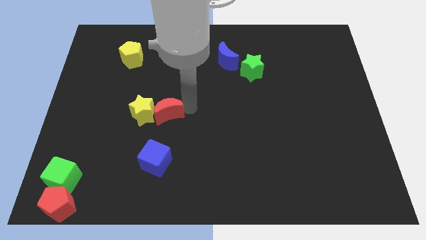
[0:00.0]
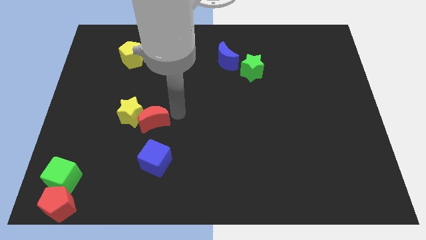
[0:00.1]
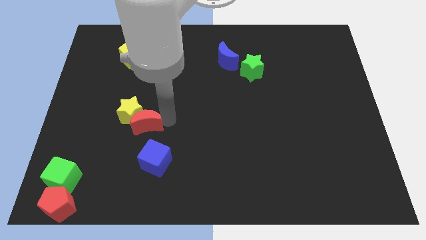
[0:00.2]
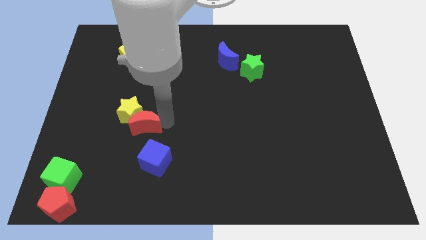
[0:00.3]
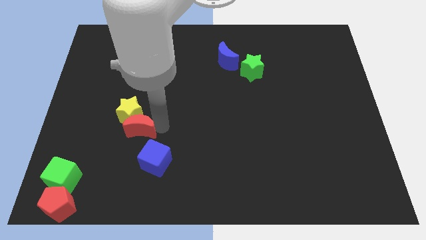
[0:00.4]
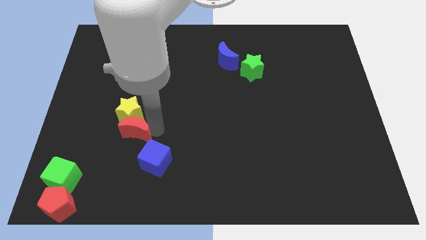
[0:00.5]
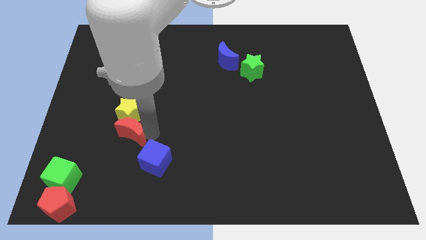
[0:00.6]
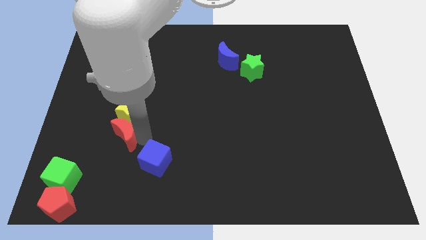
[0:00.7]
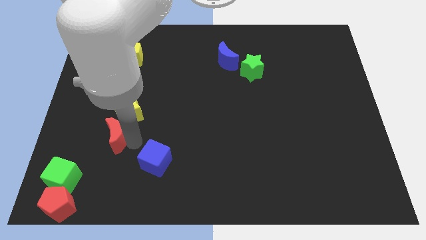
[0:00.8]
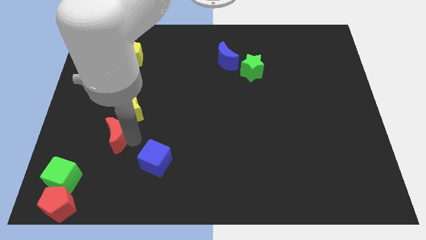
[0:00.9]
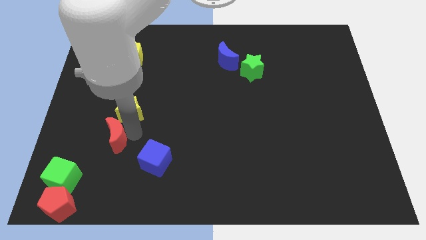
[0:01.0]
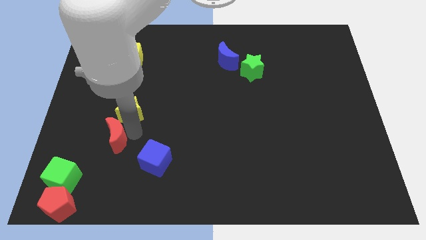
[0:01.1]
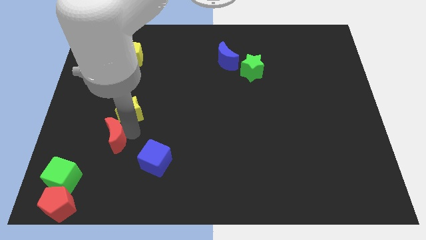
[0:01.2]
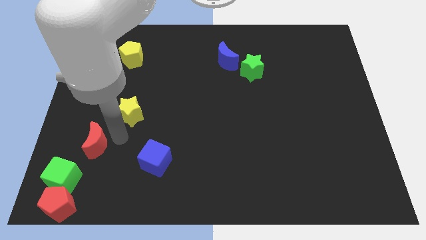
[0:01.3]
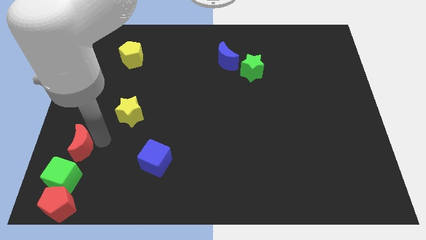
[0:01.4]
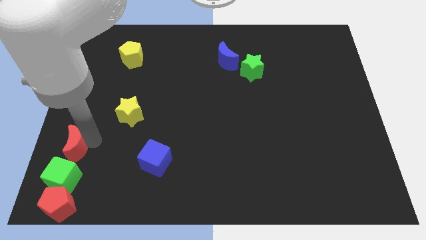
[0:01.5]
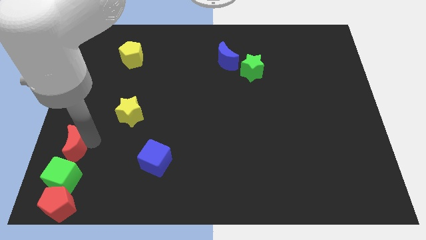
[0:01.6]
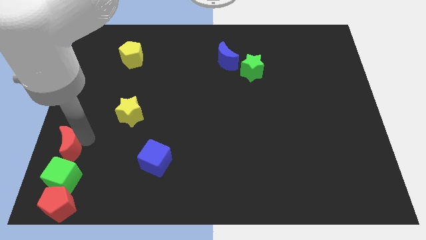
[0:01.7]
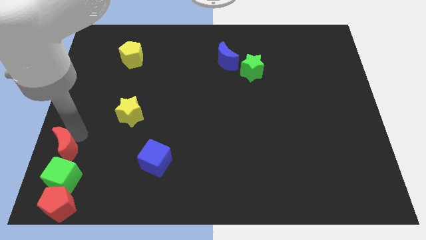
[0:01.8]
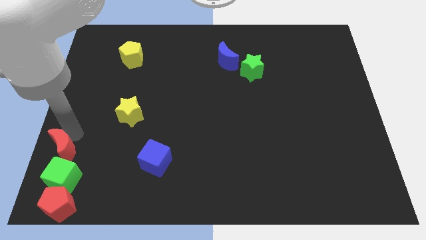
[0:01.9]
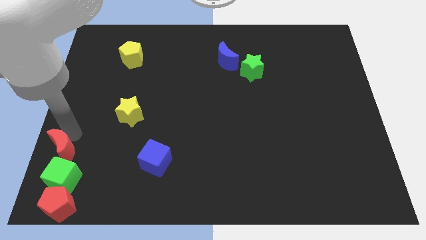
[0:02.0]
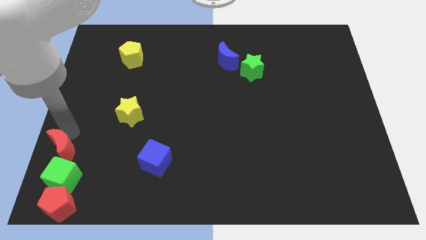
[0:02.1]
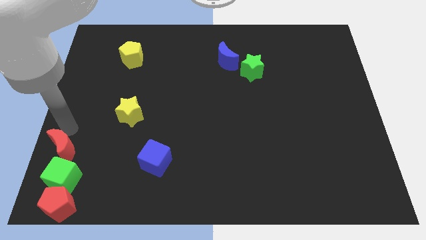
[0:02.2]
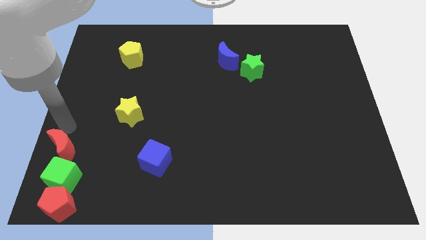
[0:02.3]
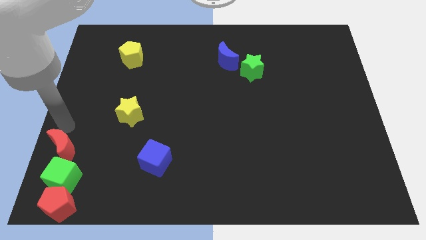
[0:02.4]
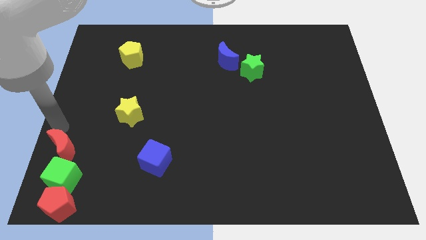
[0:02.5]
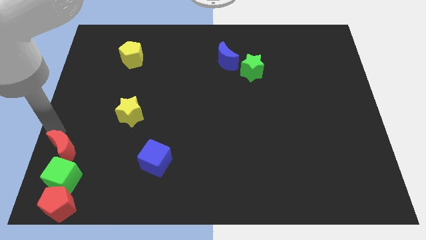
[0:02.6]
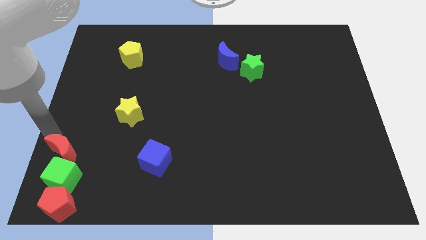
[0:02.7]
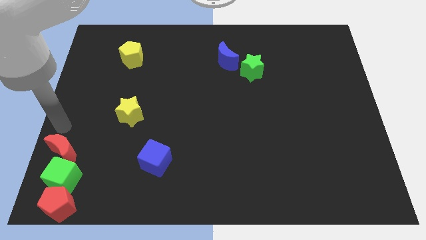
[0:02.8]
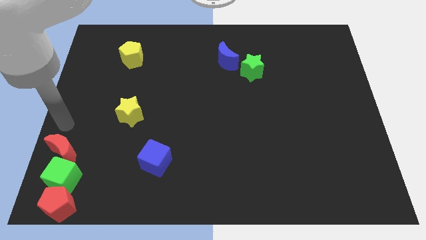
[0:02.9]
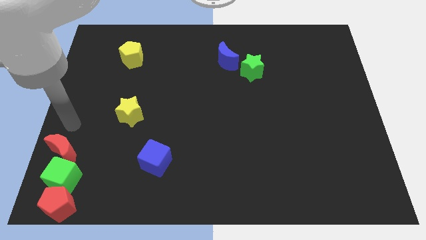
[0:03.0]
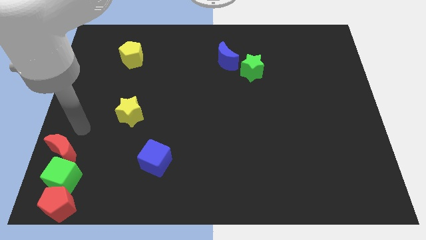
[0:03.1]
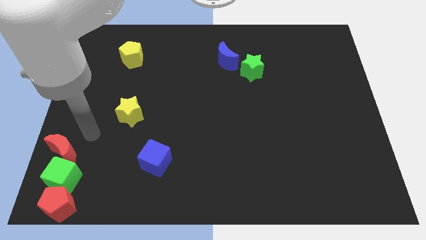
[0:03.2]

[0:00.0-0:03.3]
move red moon to the top left side of the green cube

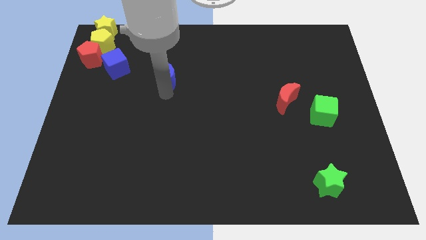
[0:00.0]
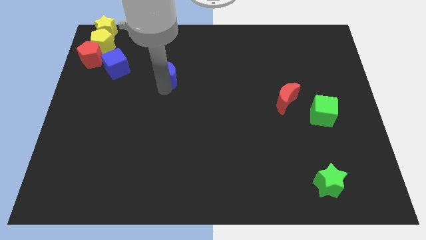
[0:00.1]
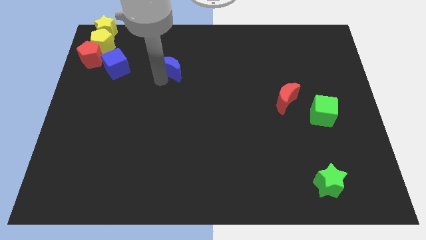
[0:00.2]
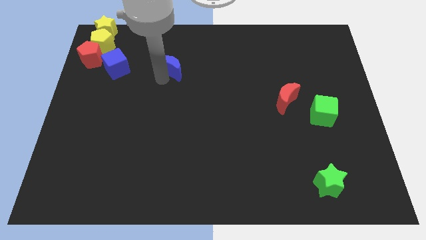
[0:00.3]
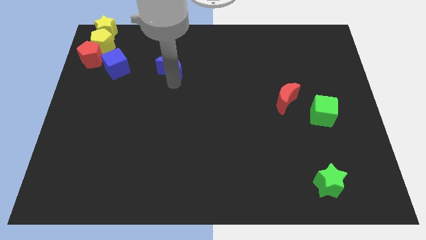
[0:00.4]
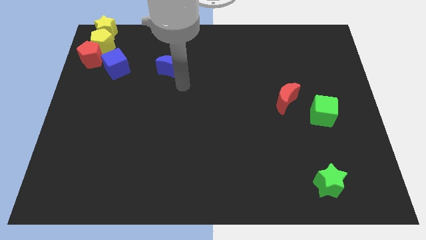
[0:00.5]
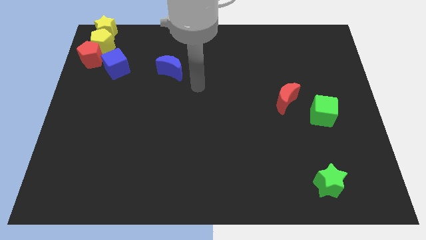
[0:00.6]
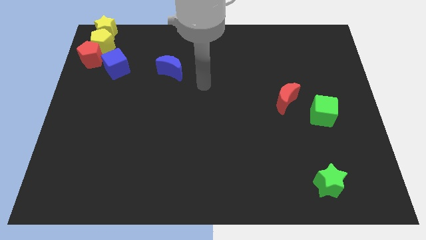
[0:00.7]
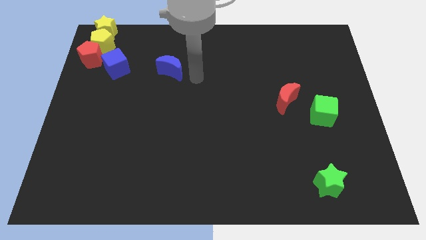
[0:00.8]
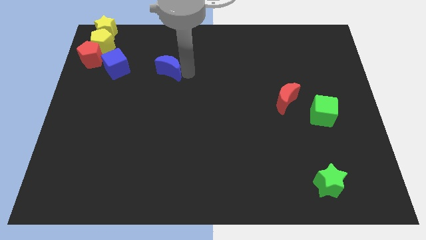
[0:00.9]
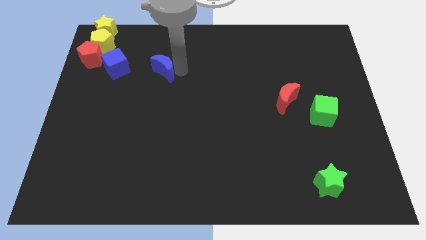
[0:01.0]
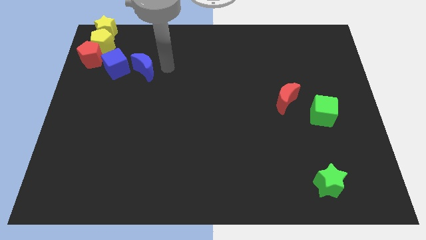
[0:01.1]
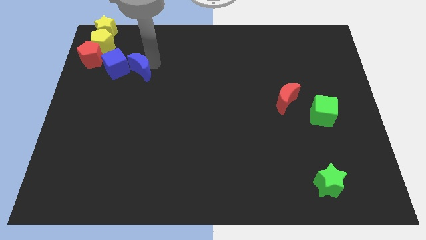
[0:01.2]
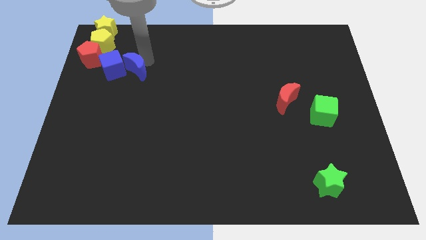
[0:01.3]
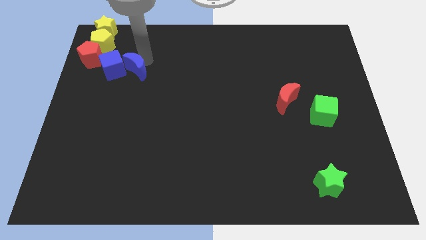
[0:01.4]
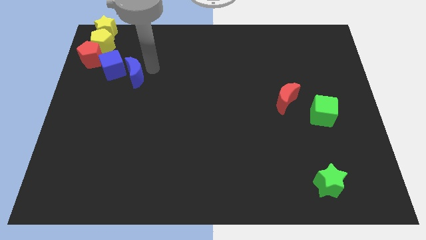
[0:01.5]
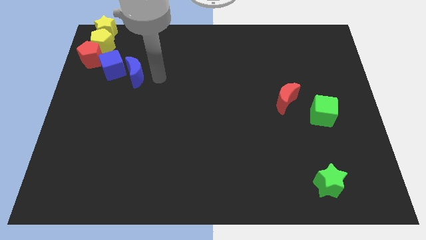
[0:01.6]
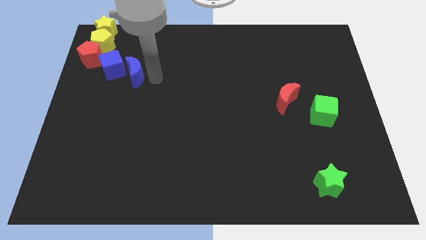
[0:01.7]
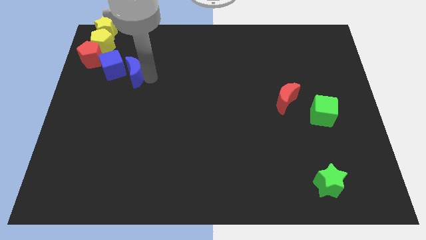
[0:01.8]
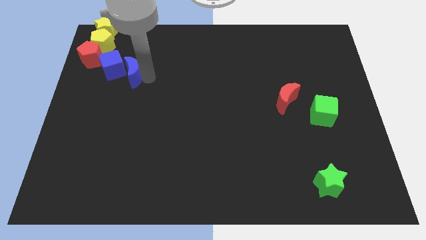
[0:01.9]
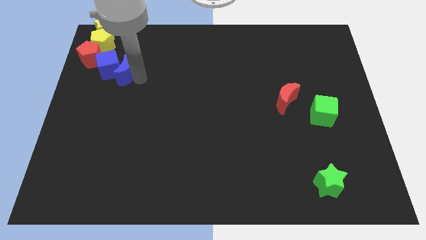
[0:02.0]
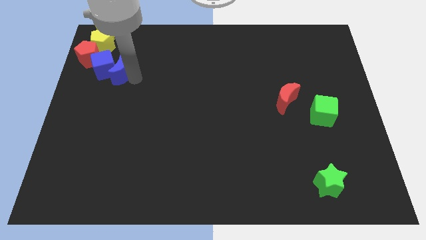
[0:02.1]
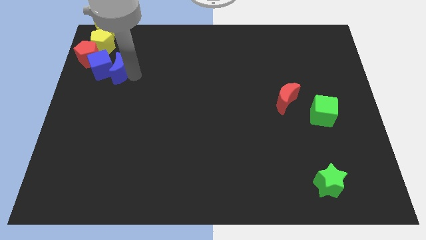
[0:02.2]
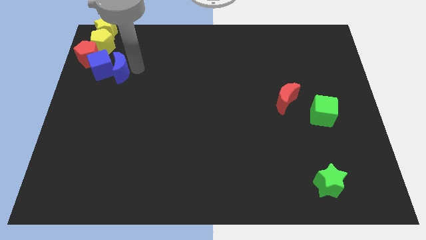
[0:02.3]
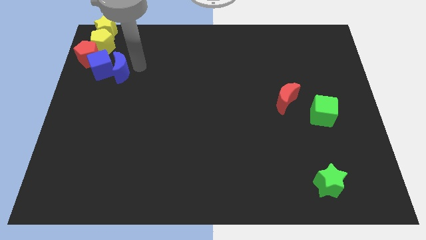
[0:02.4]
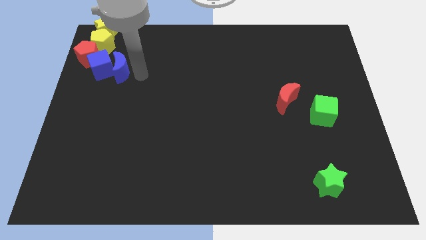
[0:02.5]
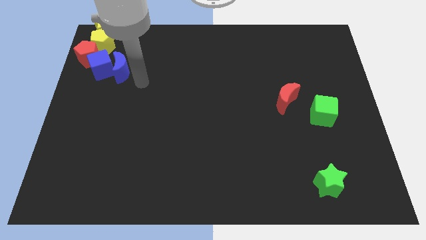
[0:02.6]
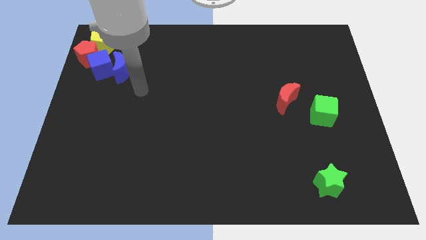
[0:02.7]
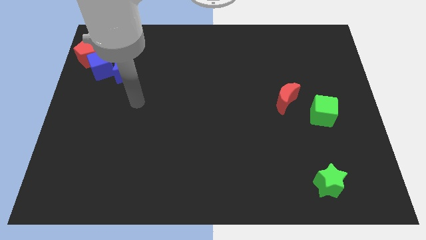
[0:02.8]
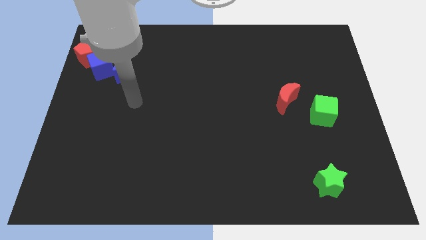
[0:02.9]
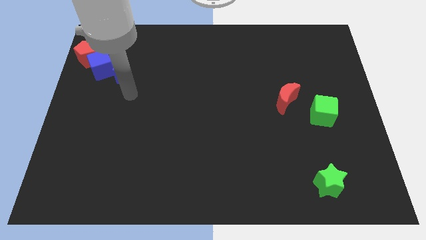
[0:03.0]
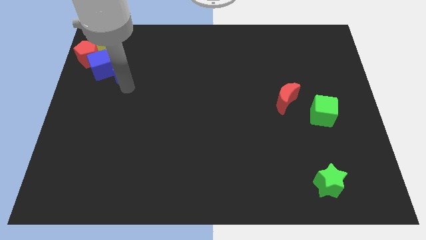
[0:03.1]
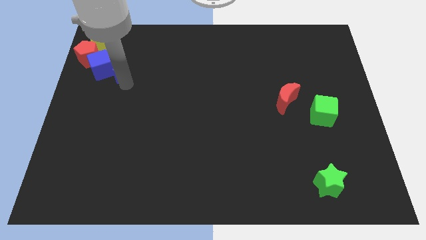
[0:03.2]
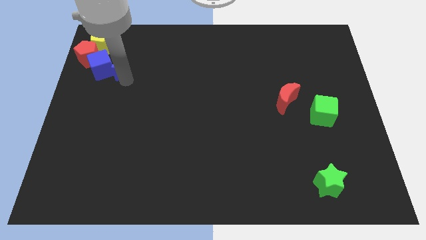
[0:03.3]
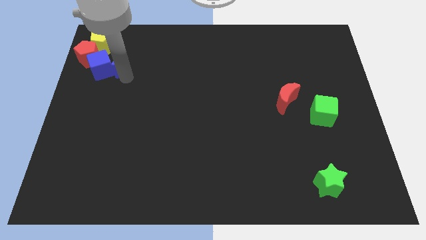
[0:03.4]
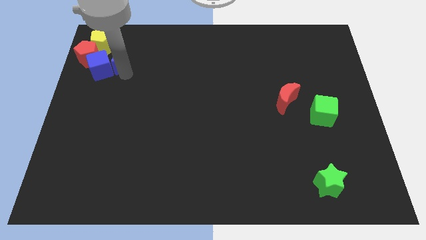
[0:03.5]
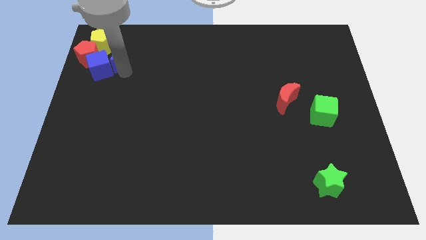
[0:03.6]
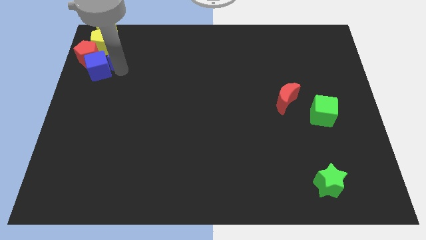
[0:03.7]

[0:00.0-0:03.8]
push the blue crescent to the right of the blue cube

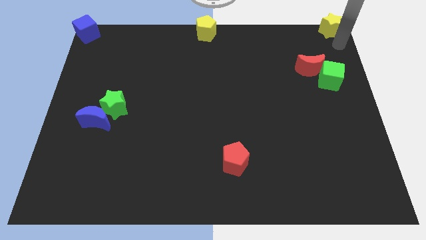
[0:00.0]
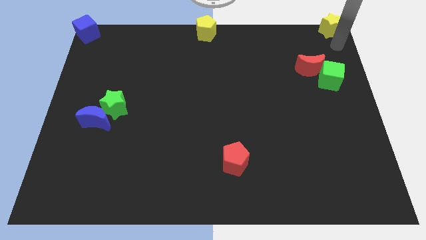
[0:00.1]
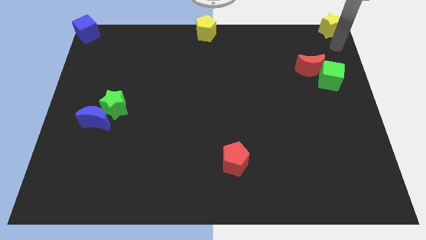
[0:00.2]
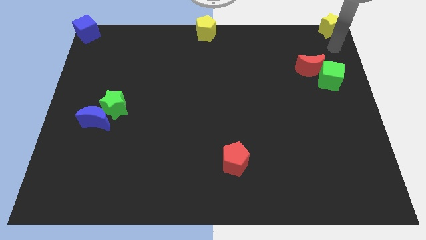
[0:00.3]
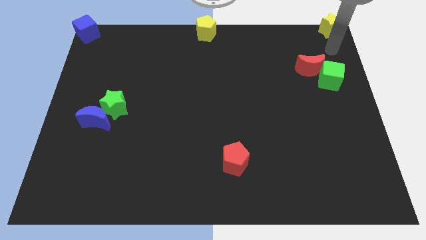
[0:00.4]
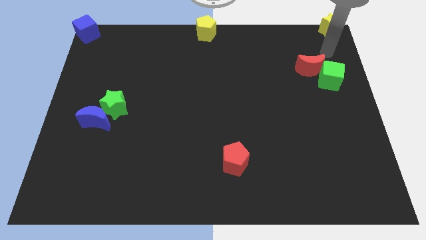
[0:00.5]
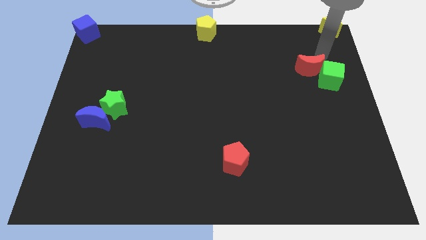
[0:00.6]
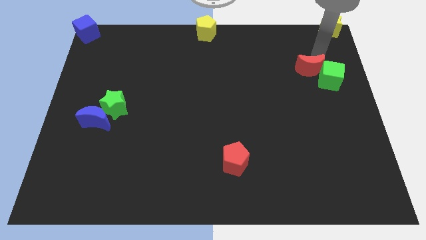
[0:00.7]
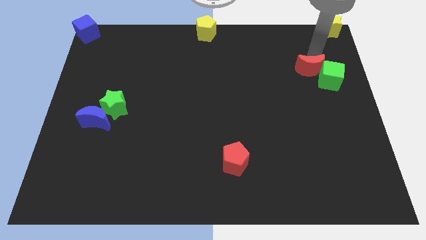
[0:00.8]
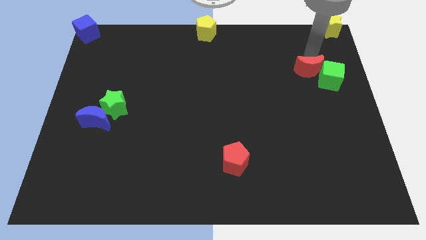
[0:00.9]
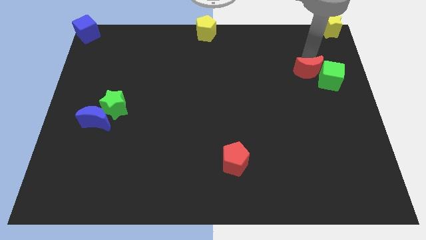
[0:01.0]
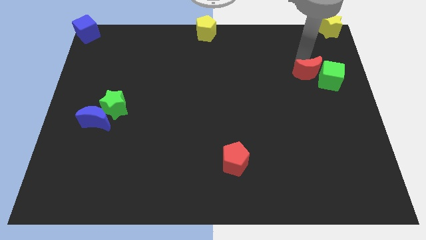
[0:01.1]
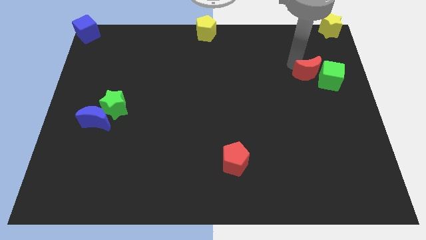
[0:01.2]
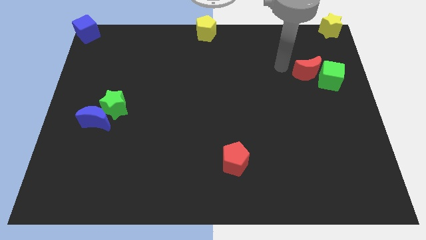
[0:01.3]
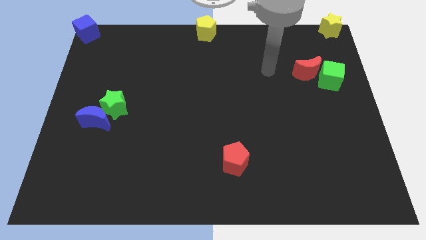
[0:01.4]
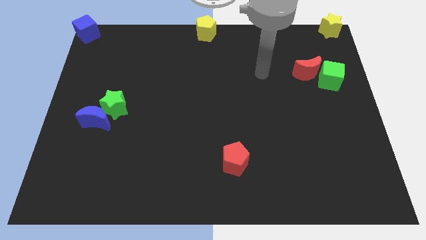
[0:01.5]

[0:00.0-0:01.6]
touch the red crescent

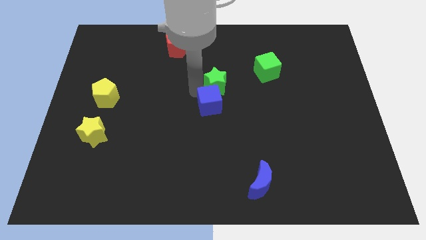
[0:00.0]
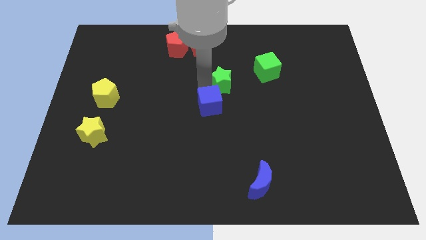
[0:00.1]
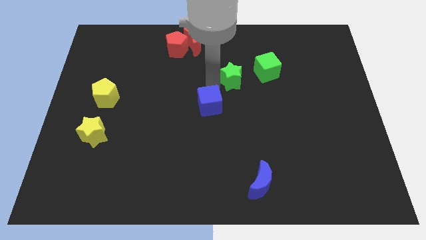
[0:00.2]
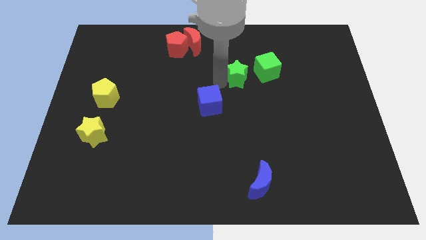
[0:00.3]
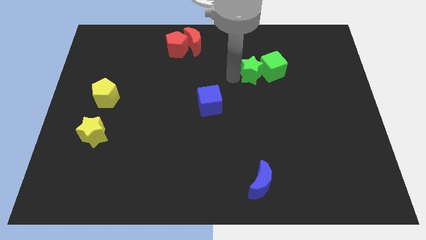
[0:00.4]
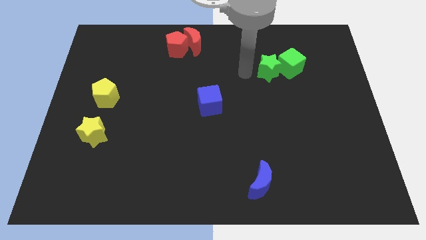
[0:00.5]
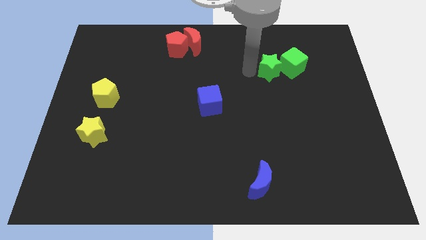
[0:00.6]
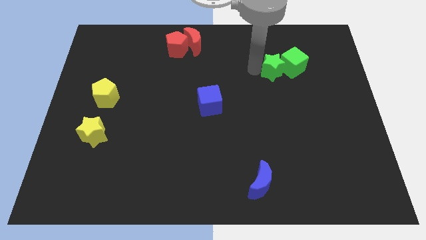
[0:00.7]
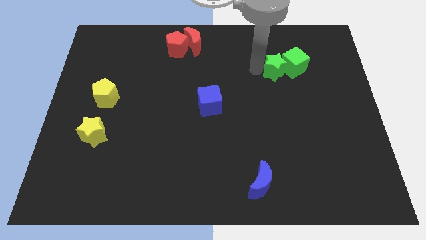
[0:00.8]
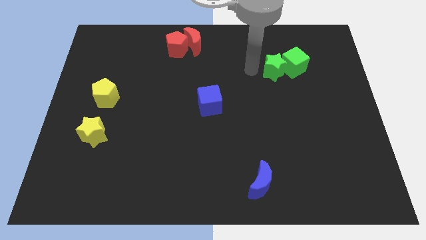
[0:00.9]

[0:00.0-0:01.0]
move green star towards green cube
